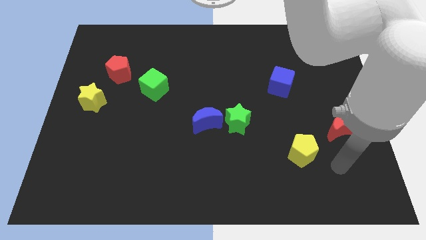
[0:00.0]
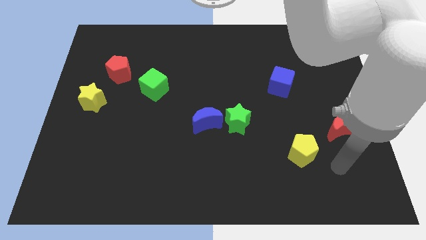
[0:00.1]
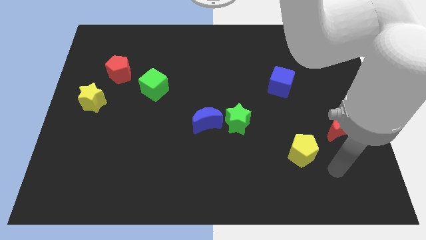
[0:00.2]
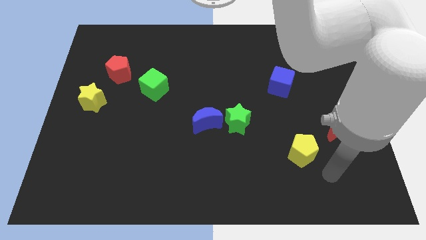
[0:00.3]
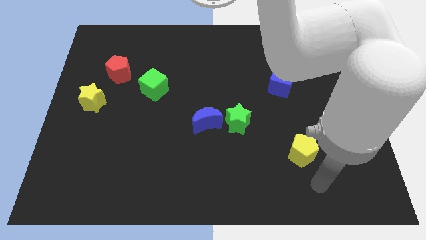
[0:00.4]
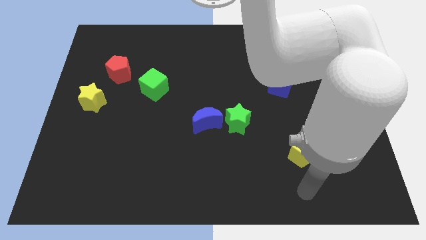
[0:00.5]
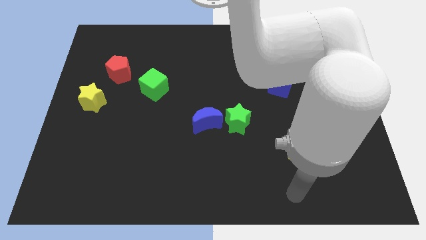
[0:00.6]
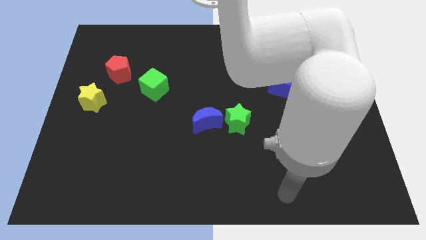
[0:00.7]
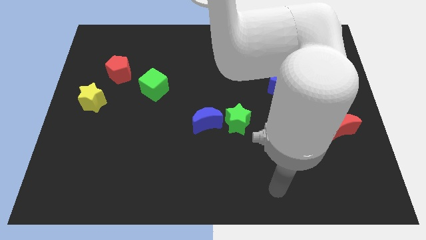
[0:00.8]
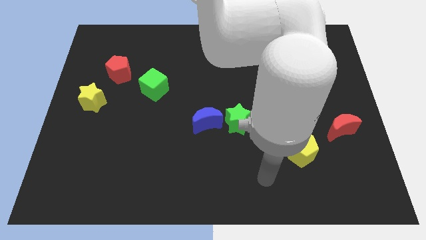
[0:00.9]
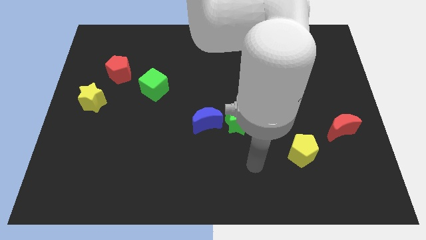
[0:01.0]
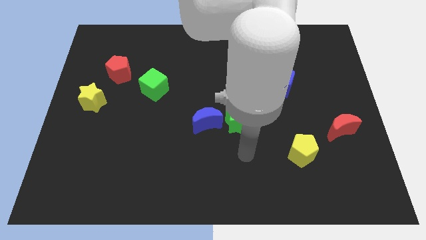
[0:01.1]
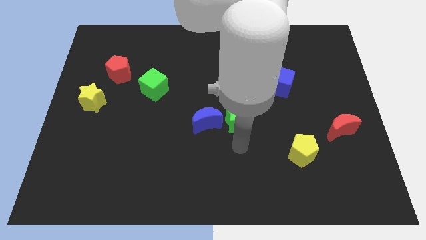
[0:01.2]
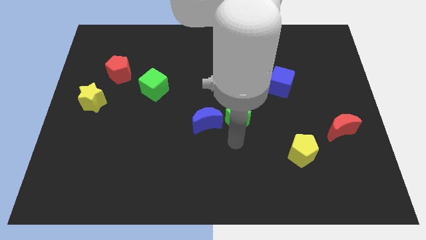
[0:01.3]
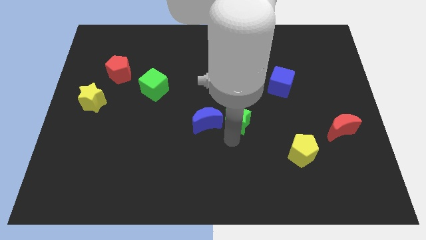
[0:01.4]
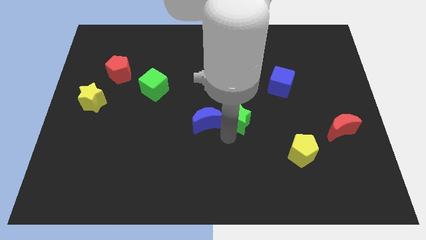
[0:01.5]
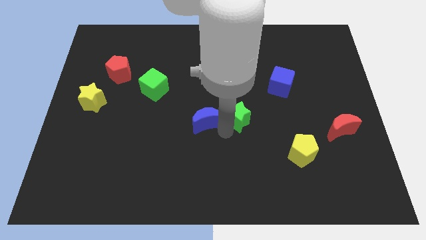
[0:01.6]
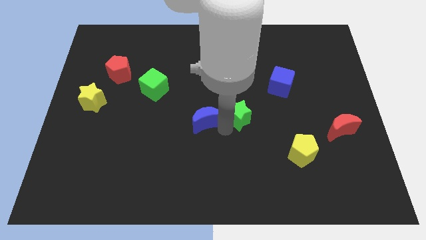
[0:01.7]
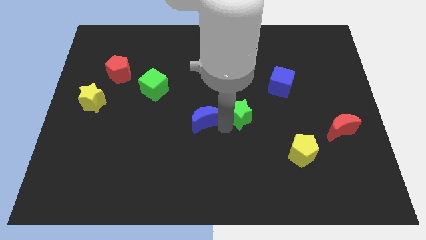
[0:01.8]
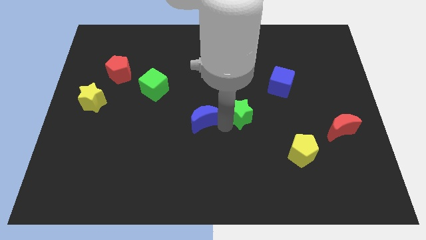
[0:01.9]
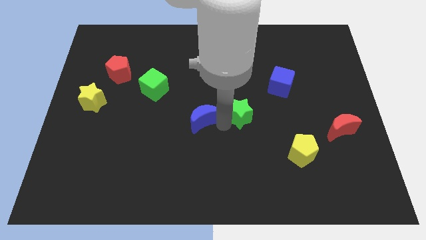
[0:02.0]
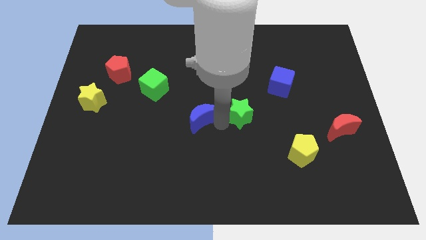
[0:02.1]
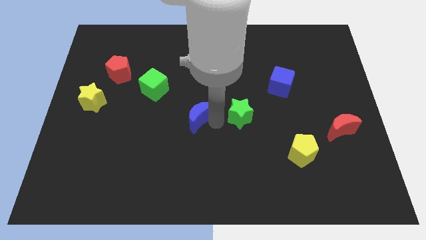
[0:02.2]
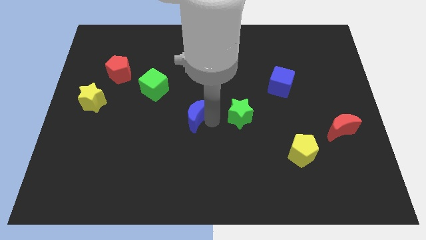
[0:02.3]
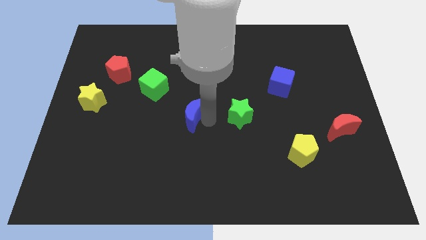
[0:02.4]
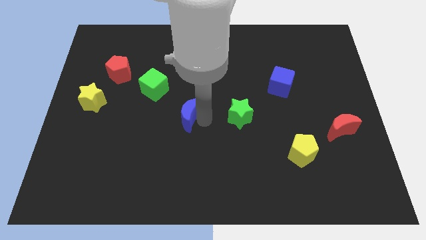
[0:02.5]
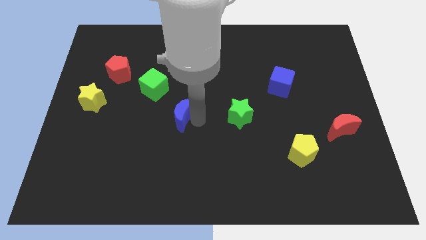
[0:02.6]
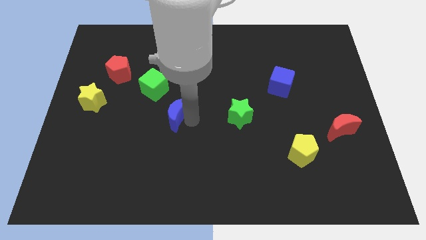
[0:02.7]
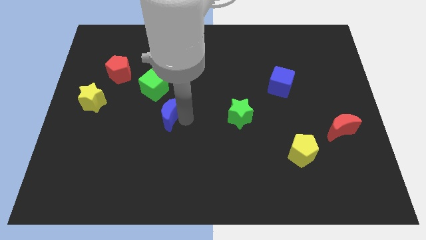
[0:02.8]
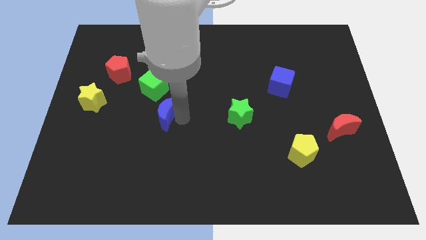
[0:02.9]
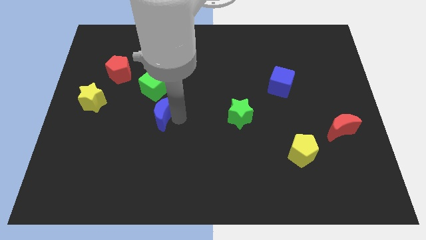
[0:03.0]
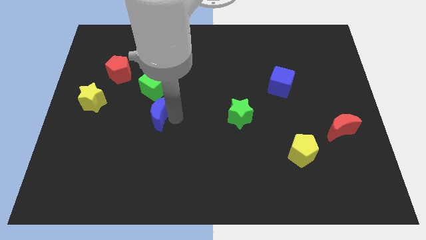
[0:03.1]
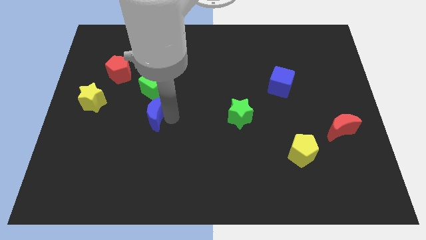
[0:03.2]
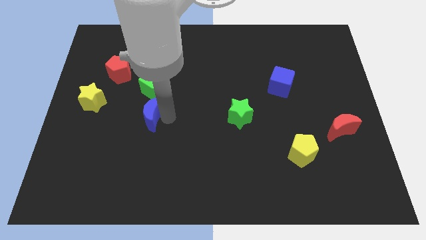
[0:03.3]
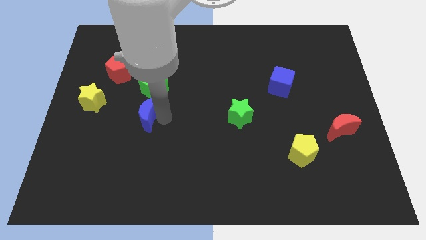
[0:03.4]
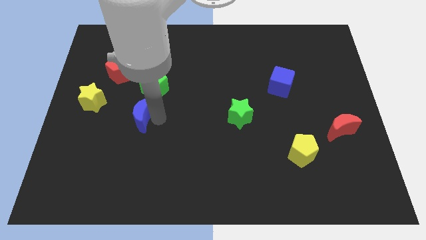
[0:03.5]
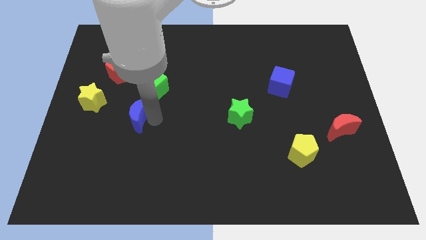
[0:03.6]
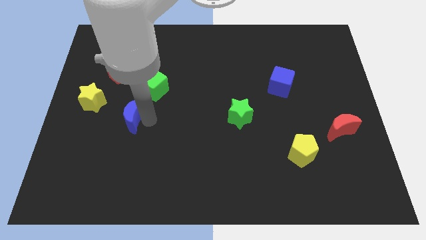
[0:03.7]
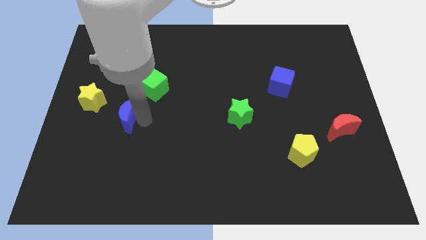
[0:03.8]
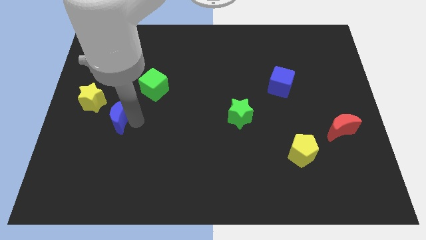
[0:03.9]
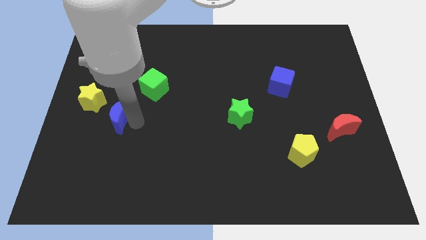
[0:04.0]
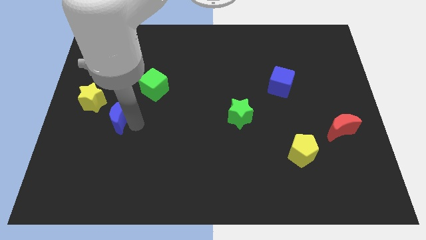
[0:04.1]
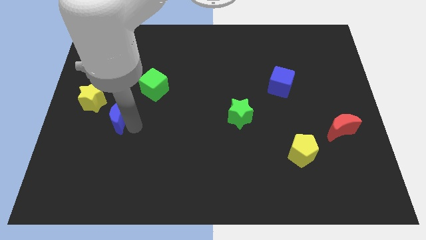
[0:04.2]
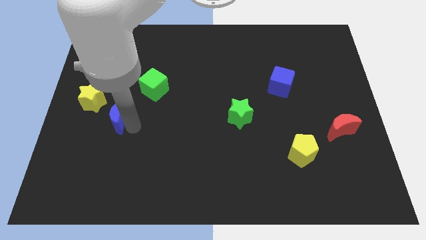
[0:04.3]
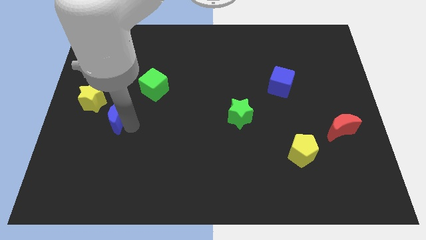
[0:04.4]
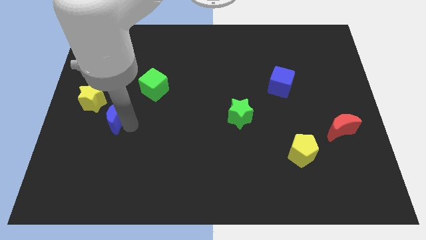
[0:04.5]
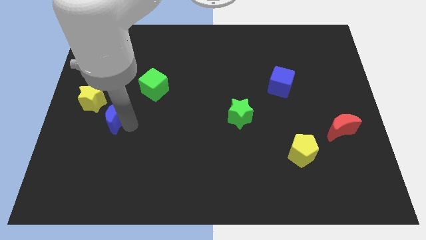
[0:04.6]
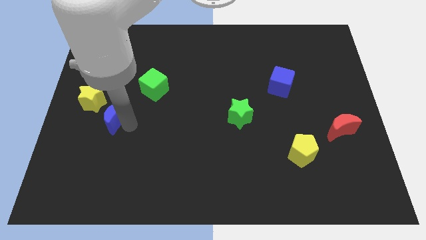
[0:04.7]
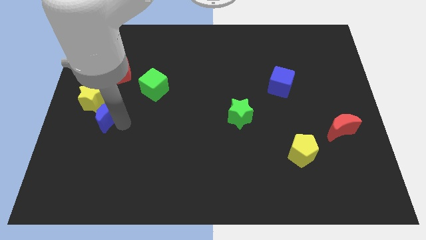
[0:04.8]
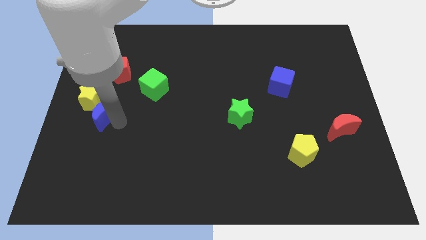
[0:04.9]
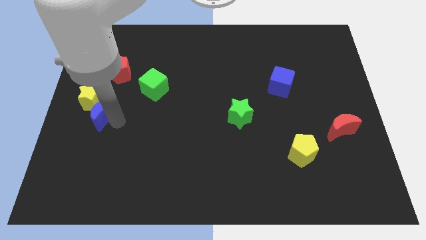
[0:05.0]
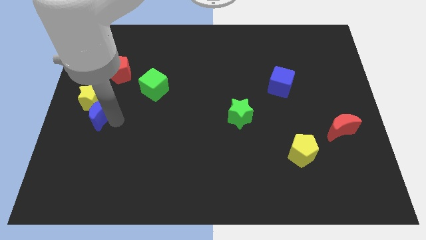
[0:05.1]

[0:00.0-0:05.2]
slide the blue moon to the yellow star

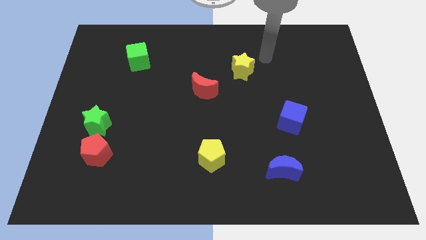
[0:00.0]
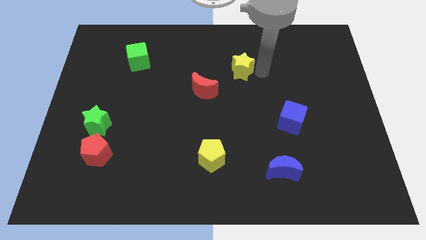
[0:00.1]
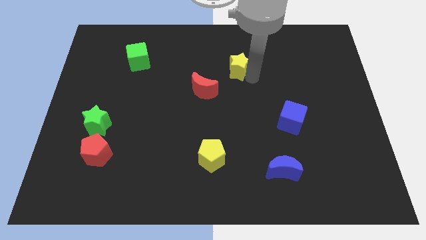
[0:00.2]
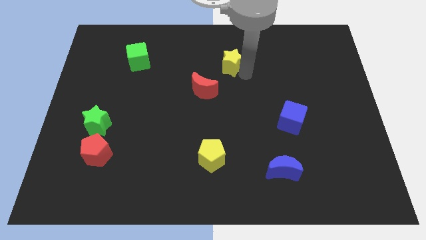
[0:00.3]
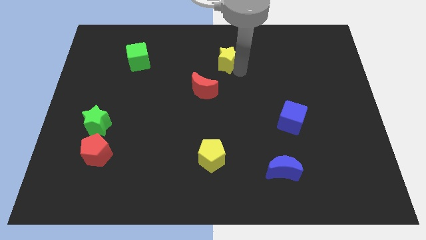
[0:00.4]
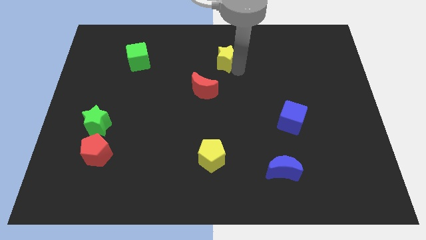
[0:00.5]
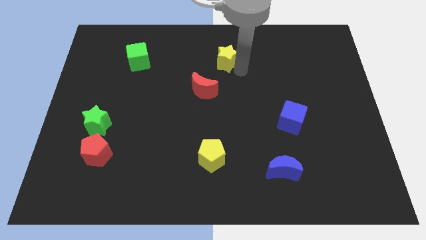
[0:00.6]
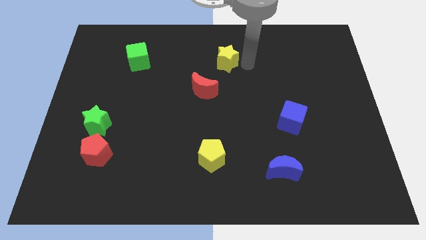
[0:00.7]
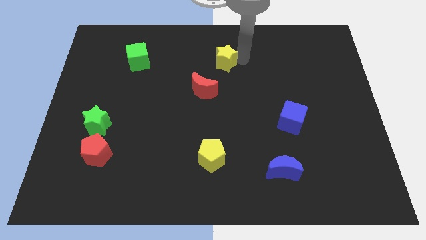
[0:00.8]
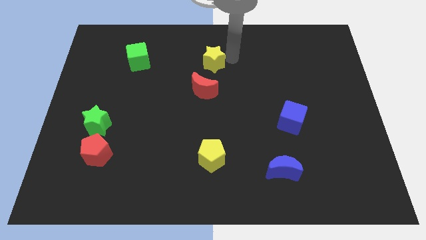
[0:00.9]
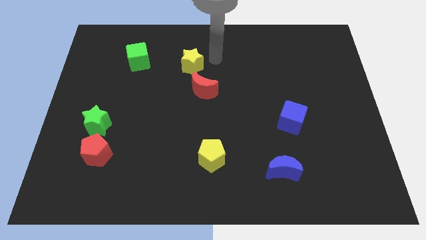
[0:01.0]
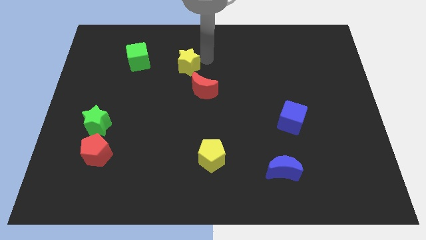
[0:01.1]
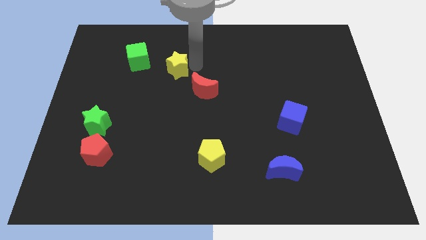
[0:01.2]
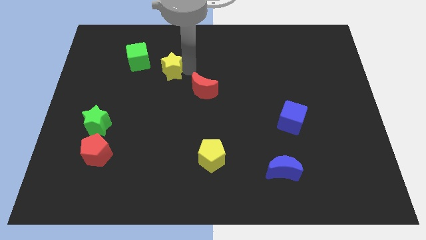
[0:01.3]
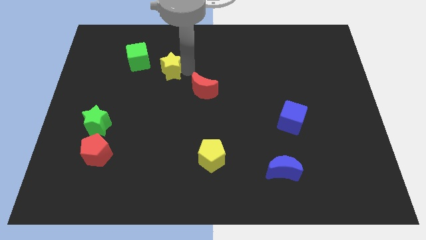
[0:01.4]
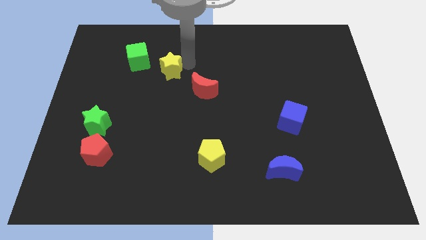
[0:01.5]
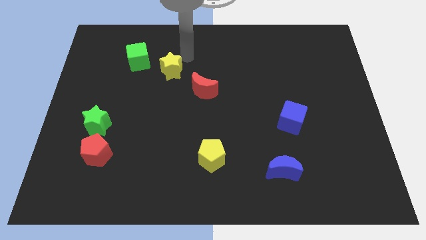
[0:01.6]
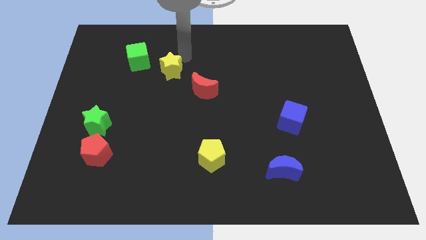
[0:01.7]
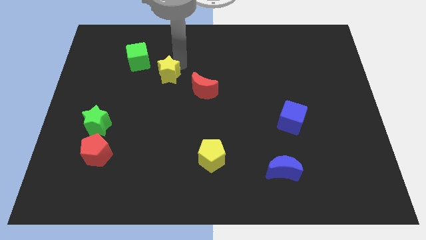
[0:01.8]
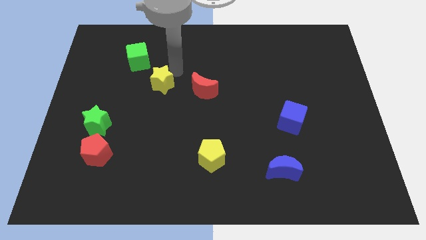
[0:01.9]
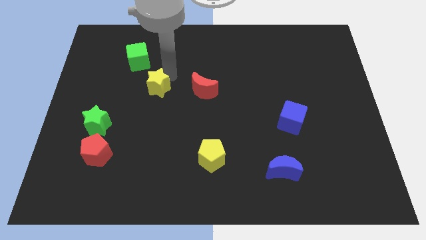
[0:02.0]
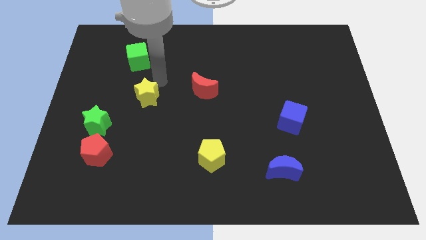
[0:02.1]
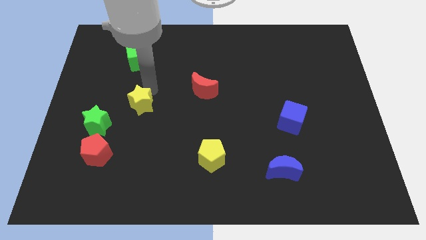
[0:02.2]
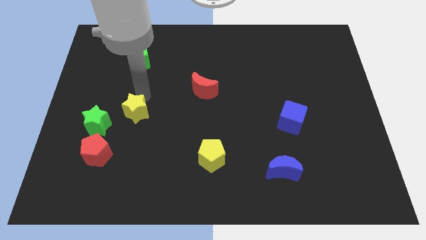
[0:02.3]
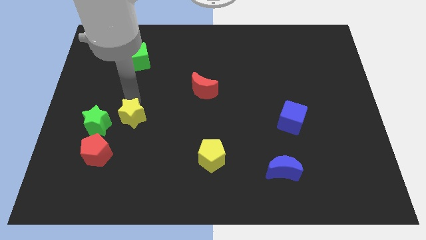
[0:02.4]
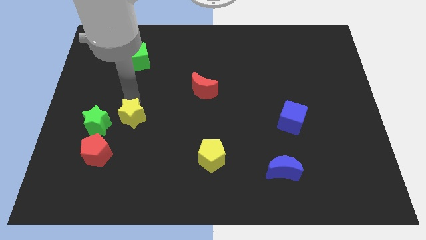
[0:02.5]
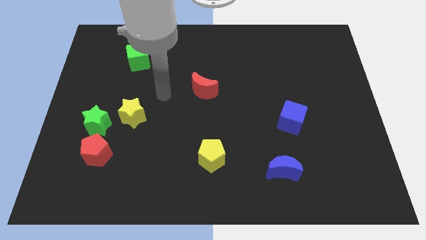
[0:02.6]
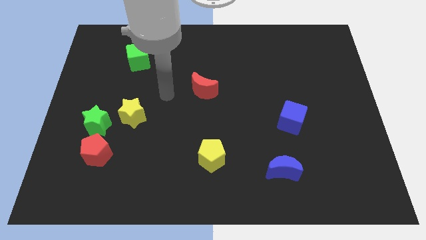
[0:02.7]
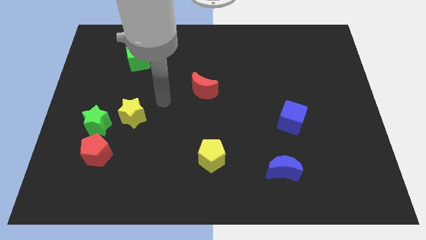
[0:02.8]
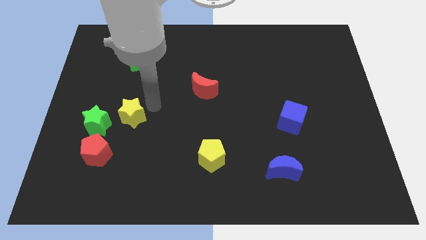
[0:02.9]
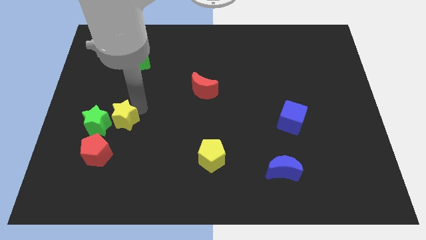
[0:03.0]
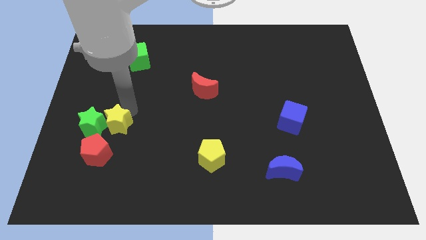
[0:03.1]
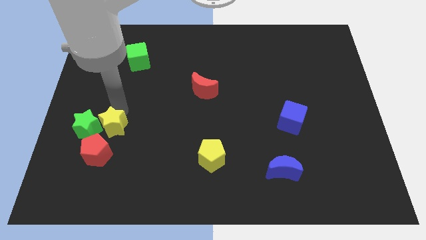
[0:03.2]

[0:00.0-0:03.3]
slide the yellow star to the green star

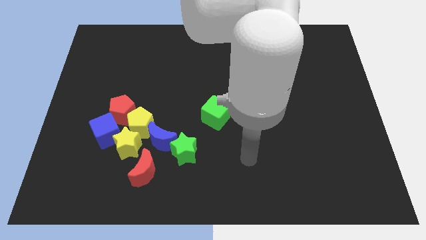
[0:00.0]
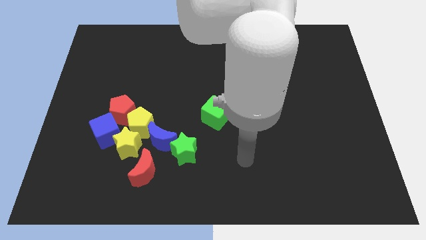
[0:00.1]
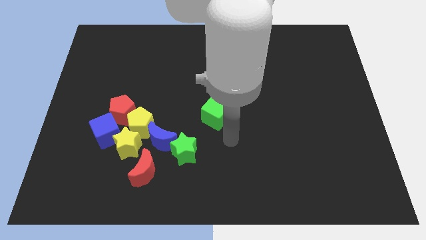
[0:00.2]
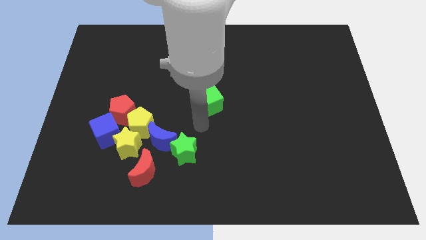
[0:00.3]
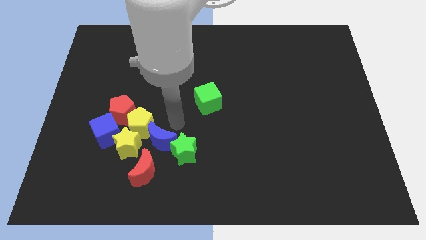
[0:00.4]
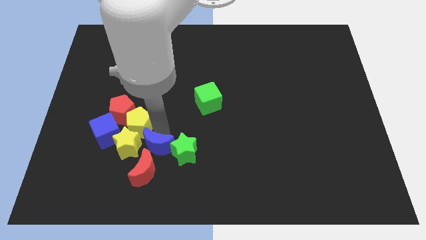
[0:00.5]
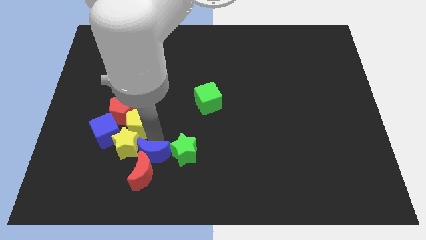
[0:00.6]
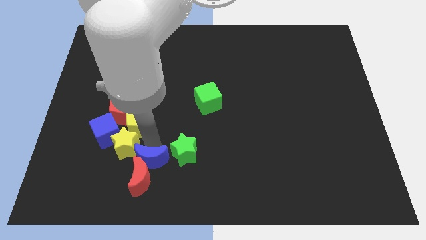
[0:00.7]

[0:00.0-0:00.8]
move the blue moon close to the red moon
